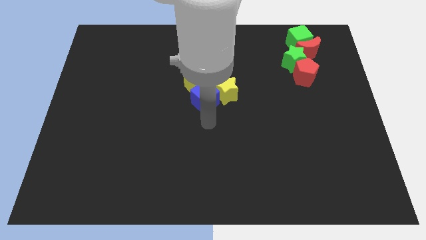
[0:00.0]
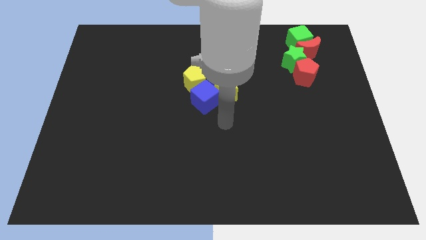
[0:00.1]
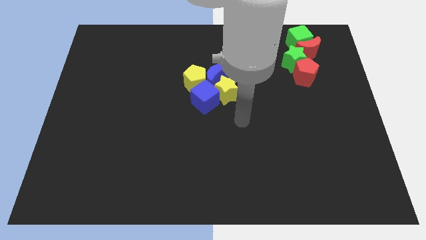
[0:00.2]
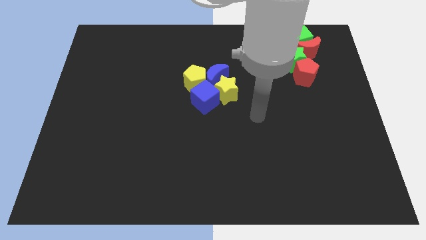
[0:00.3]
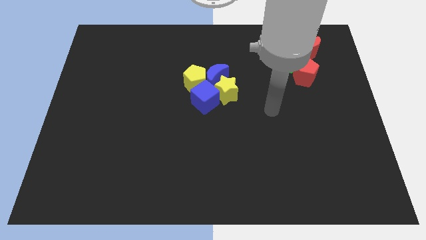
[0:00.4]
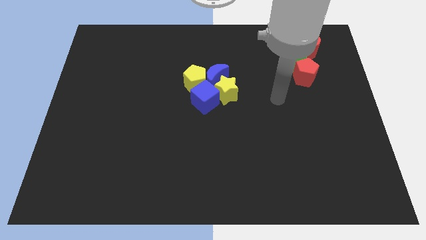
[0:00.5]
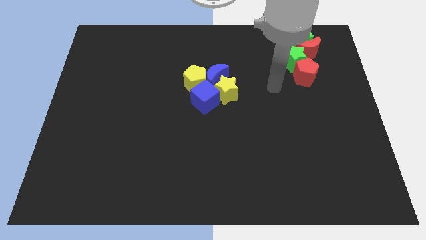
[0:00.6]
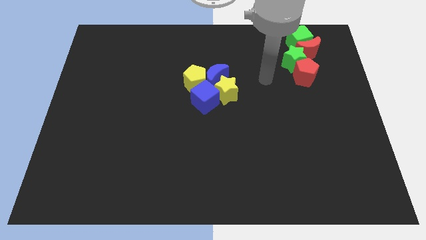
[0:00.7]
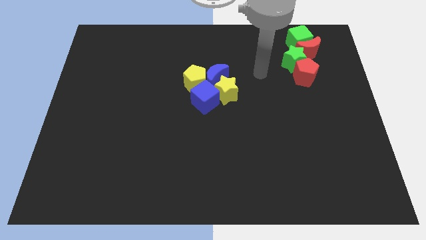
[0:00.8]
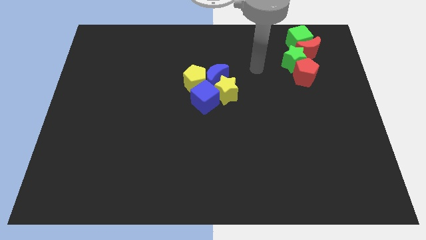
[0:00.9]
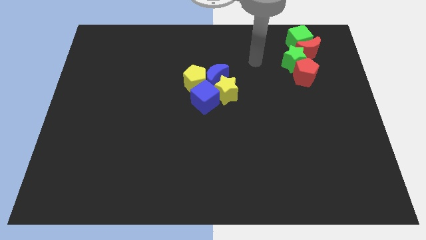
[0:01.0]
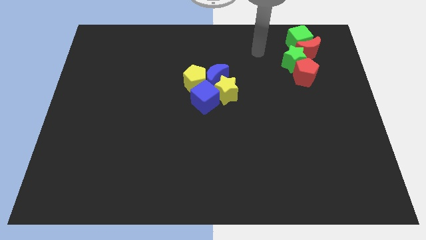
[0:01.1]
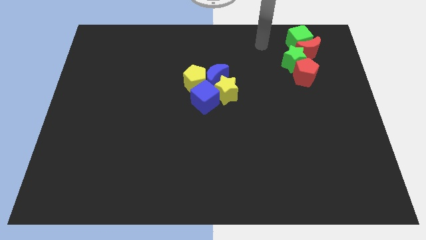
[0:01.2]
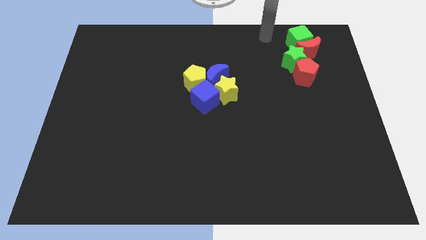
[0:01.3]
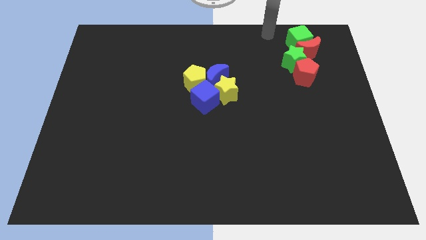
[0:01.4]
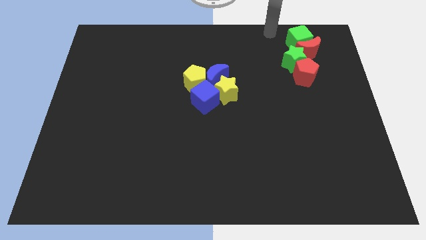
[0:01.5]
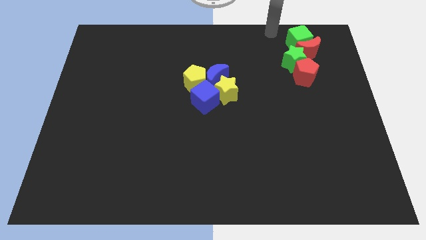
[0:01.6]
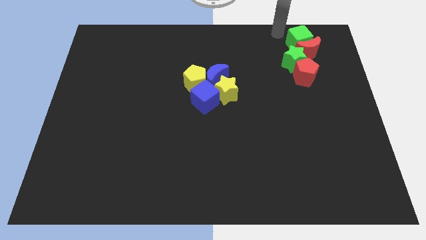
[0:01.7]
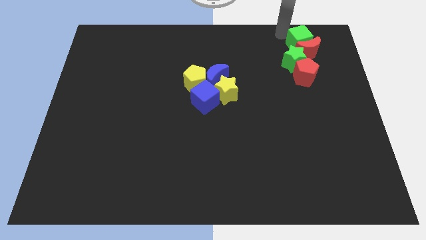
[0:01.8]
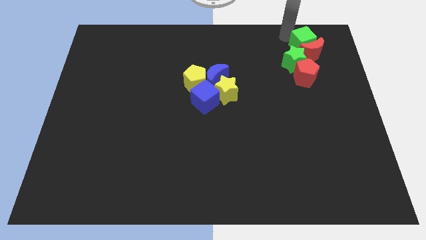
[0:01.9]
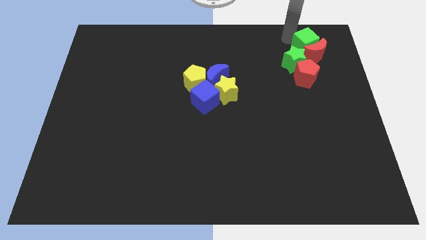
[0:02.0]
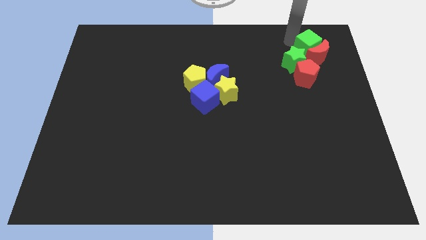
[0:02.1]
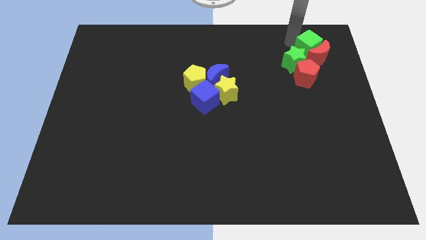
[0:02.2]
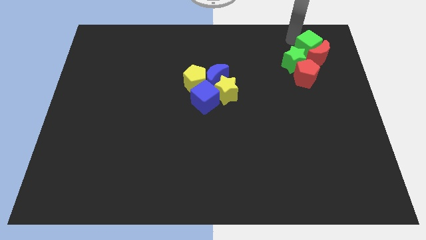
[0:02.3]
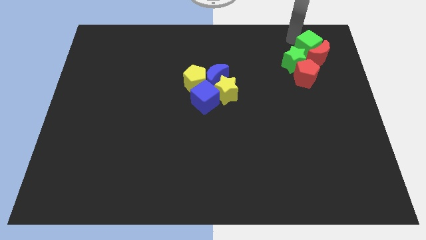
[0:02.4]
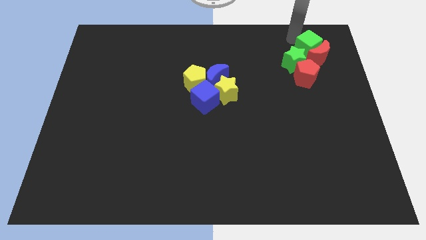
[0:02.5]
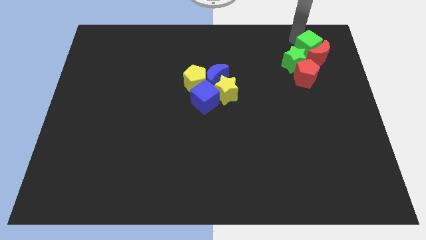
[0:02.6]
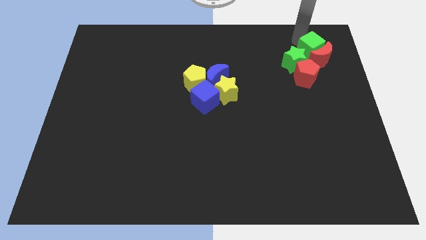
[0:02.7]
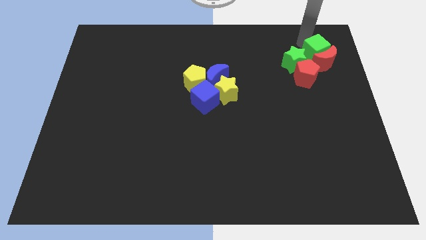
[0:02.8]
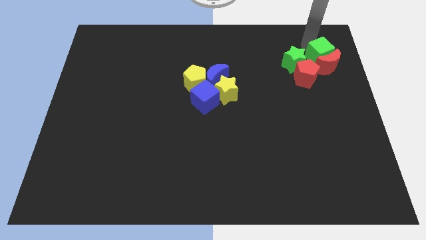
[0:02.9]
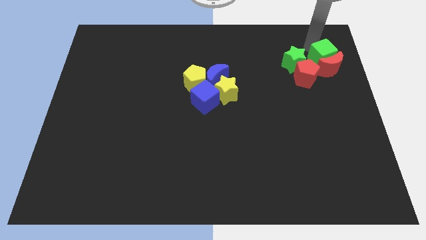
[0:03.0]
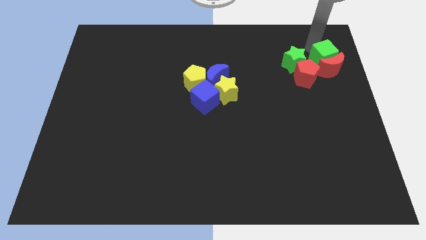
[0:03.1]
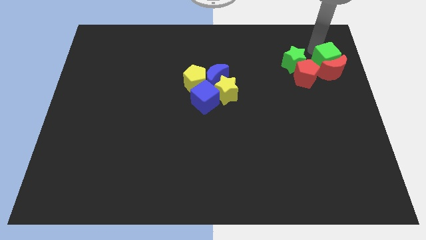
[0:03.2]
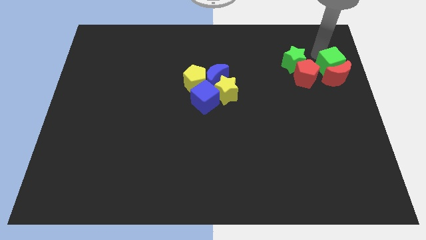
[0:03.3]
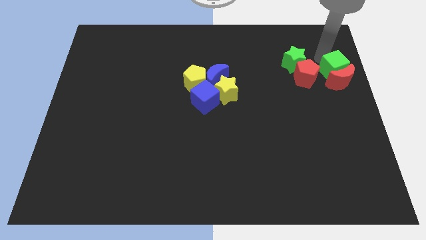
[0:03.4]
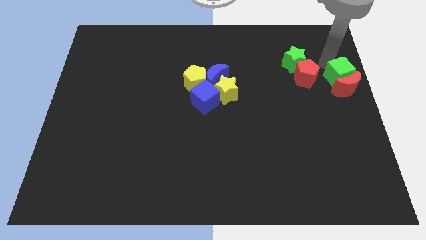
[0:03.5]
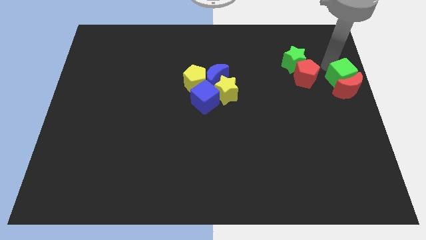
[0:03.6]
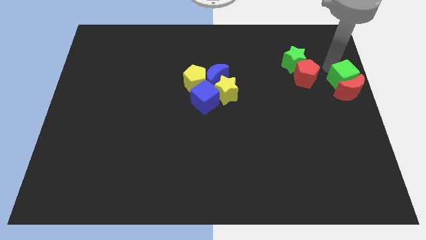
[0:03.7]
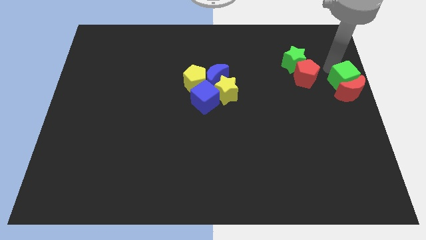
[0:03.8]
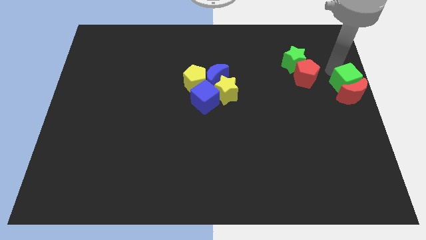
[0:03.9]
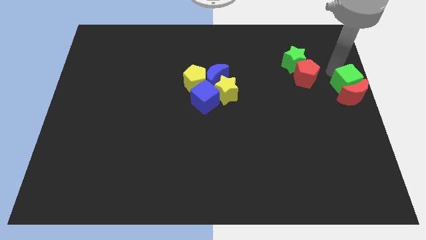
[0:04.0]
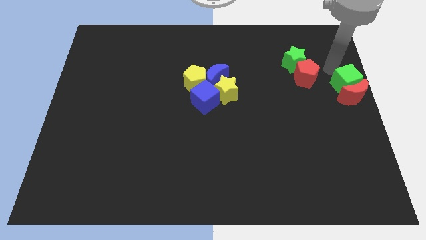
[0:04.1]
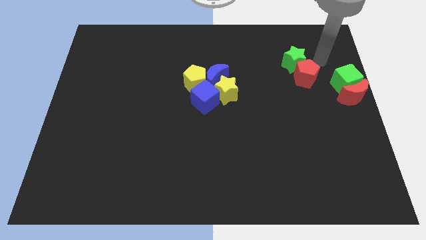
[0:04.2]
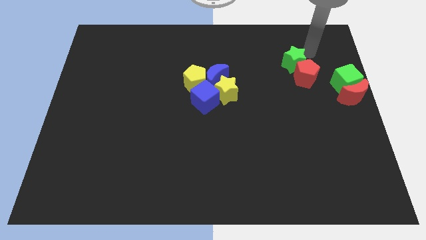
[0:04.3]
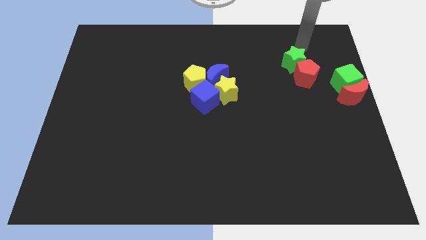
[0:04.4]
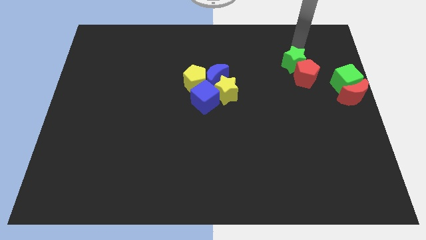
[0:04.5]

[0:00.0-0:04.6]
push the green cube into the red crescent

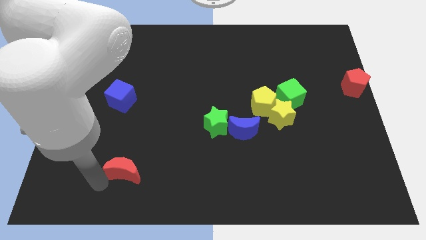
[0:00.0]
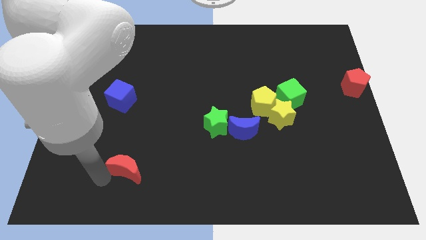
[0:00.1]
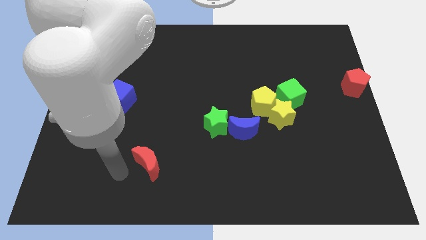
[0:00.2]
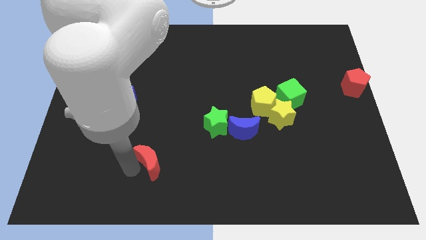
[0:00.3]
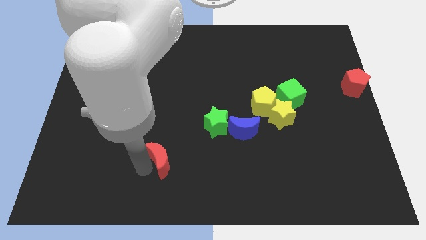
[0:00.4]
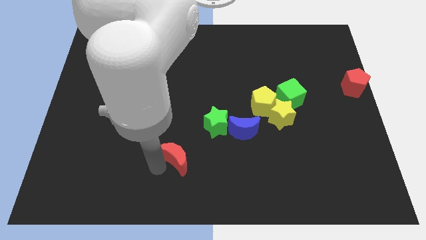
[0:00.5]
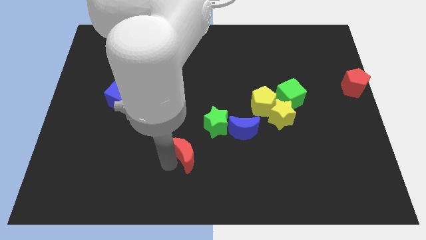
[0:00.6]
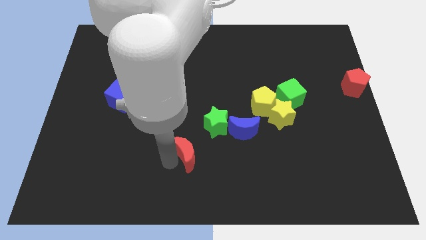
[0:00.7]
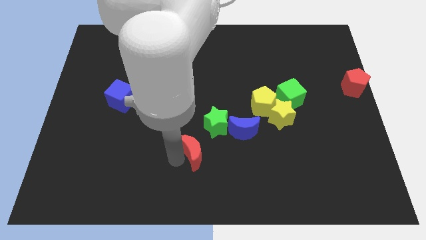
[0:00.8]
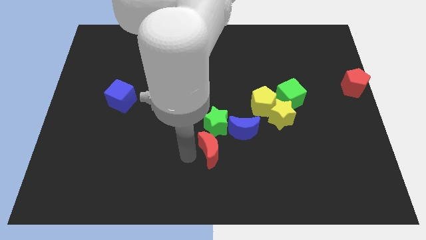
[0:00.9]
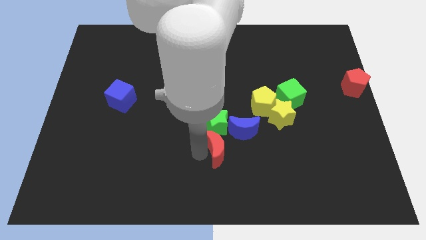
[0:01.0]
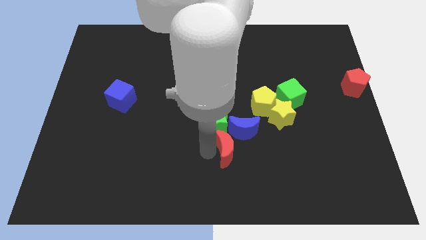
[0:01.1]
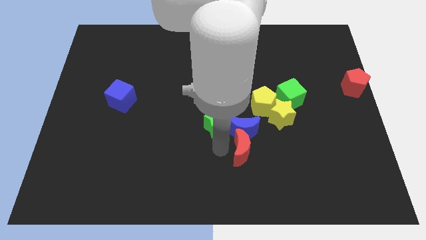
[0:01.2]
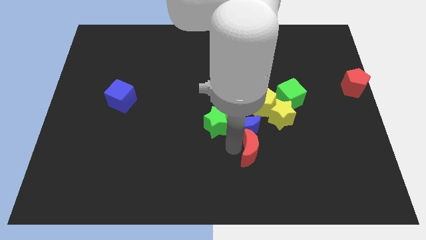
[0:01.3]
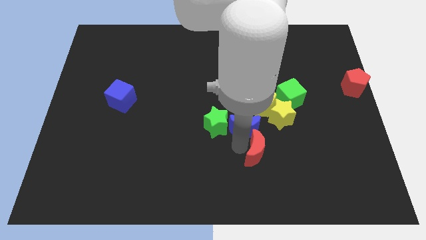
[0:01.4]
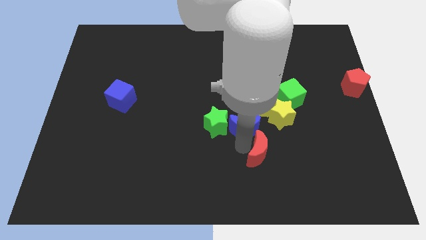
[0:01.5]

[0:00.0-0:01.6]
move the red crescent below the blue crescent

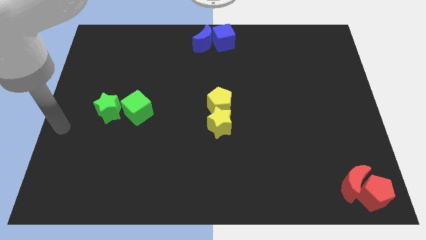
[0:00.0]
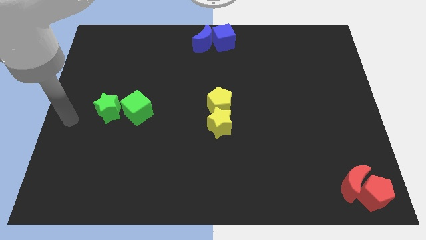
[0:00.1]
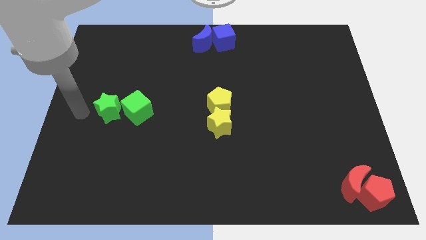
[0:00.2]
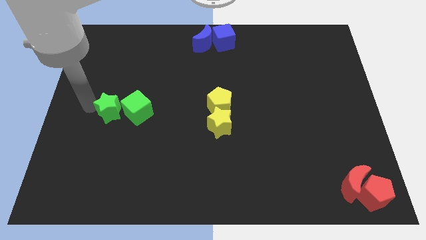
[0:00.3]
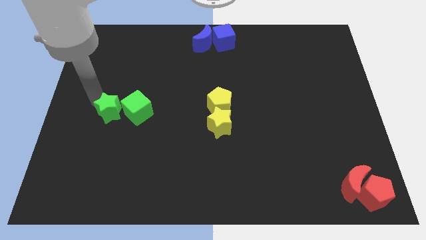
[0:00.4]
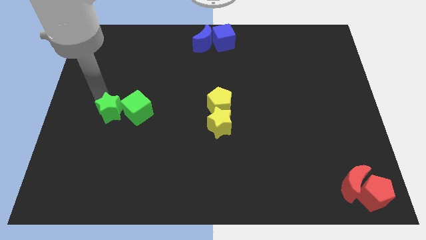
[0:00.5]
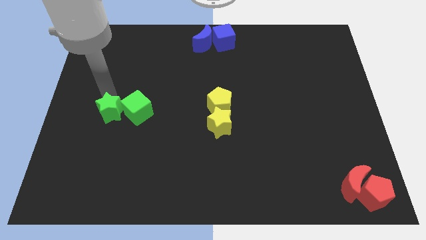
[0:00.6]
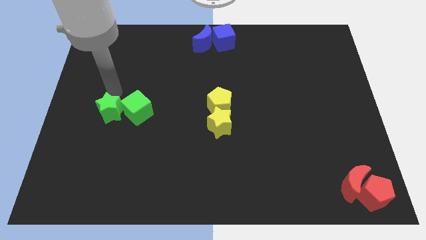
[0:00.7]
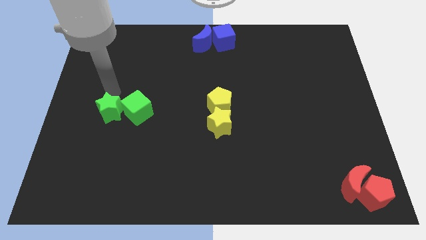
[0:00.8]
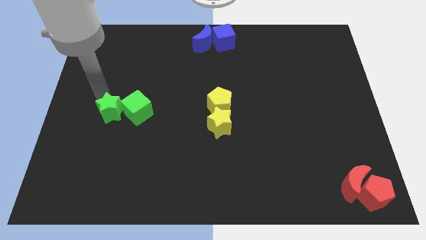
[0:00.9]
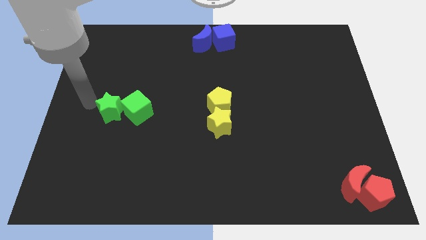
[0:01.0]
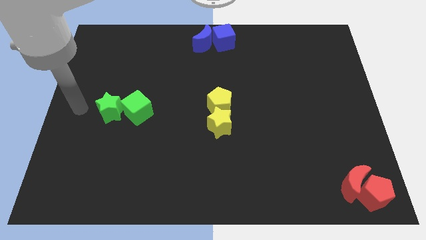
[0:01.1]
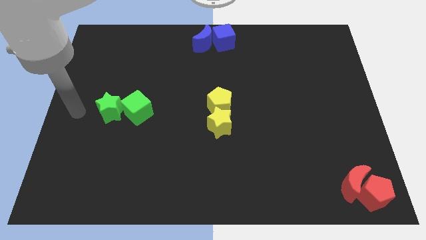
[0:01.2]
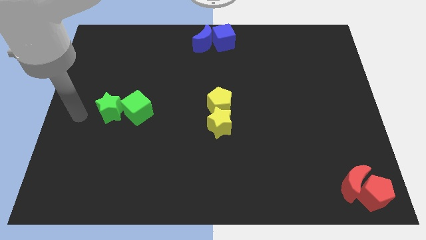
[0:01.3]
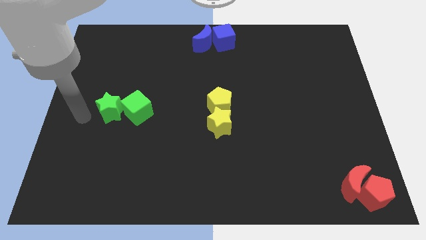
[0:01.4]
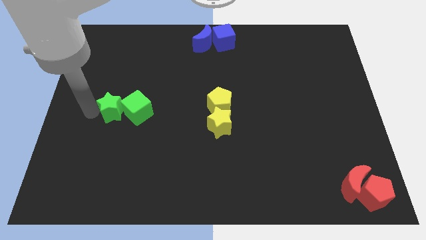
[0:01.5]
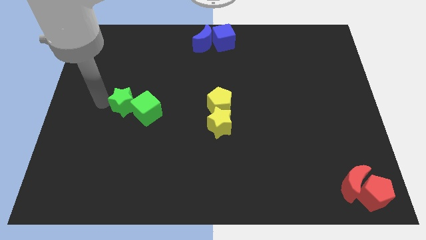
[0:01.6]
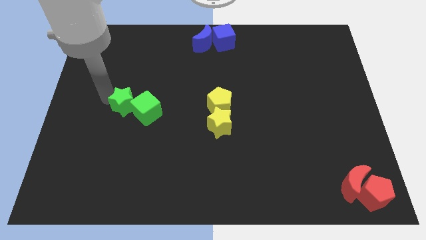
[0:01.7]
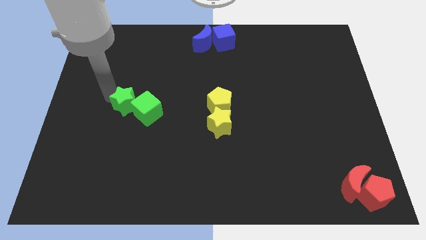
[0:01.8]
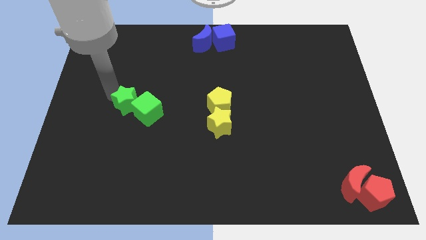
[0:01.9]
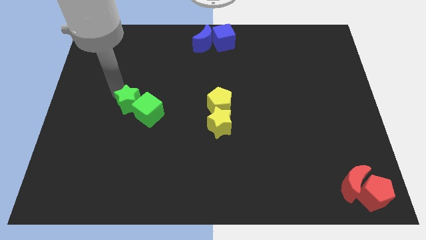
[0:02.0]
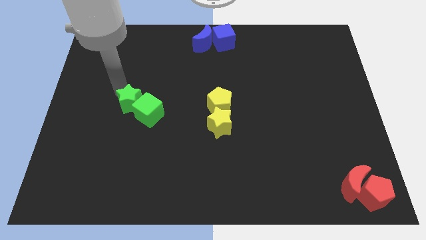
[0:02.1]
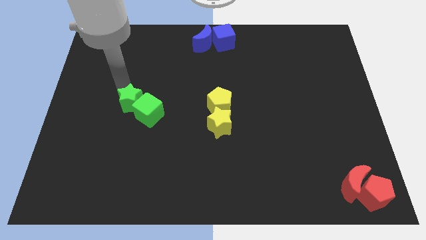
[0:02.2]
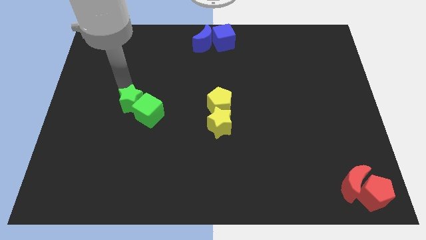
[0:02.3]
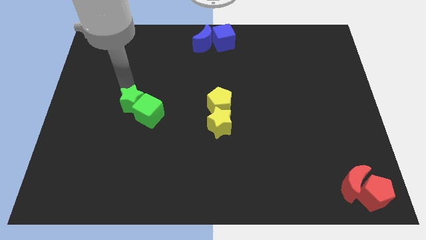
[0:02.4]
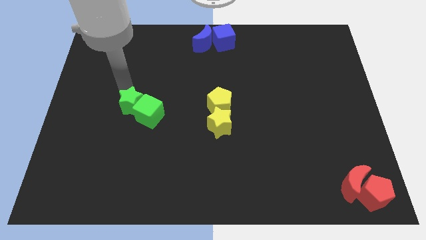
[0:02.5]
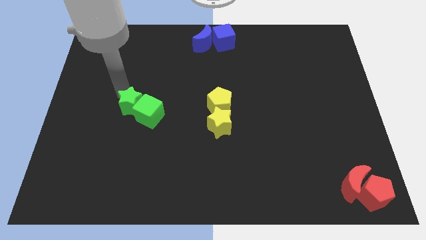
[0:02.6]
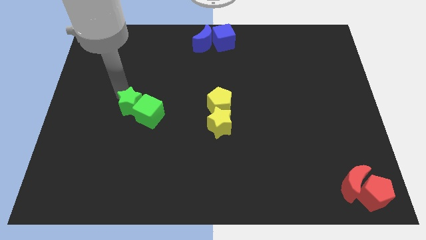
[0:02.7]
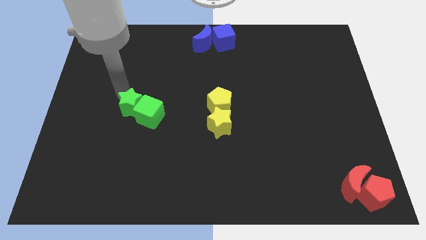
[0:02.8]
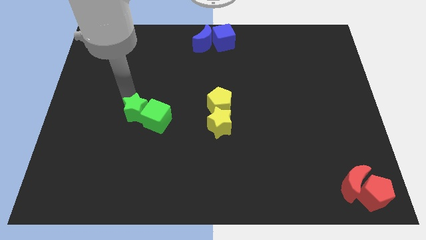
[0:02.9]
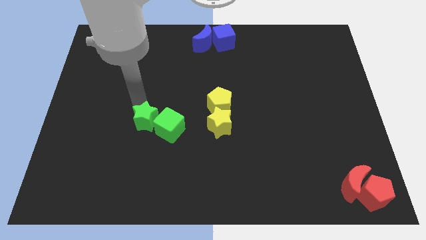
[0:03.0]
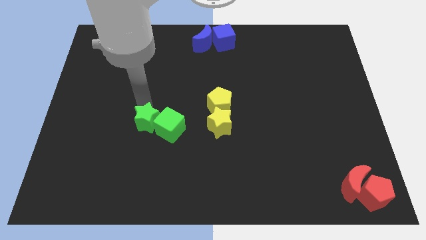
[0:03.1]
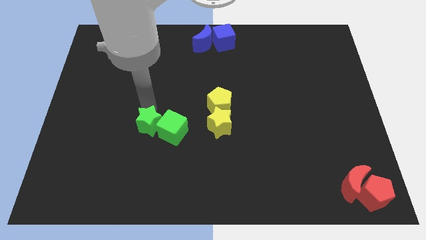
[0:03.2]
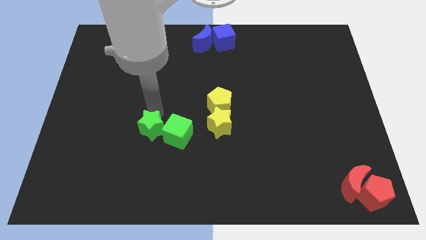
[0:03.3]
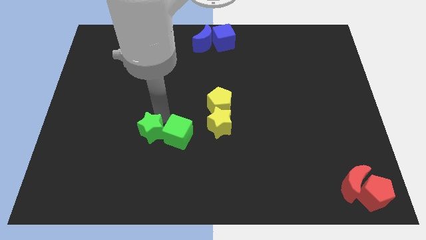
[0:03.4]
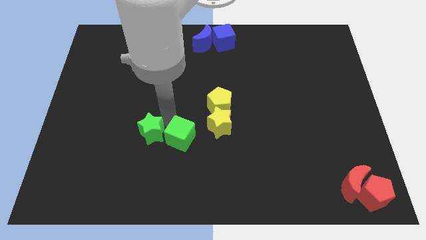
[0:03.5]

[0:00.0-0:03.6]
push the green blocks to the left of yellow star
